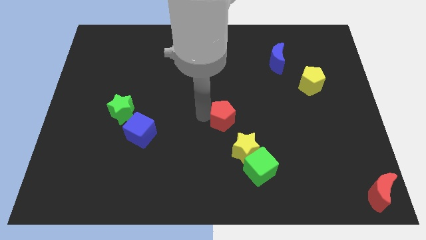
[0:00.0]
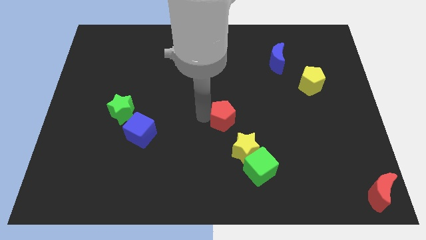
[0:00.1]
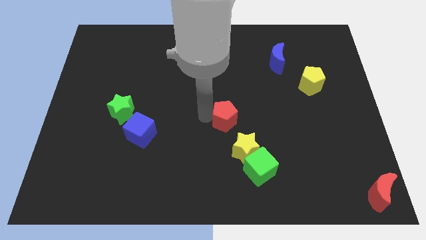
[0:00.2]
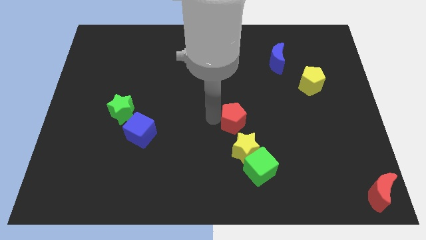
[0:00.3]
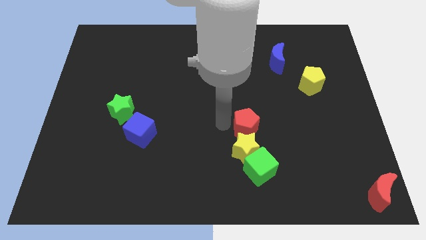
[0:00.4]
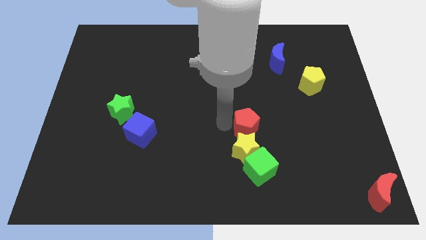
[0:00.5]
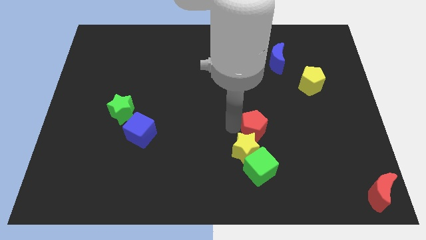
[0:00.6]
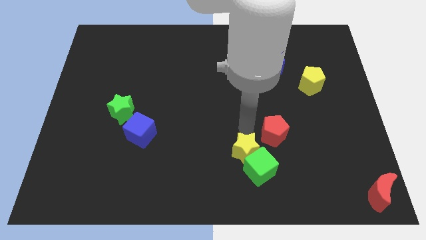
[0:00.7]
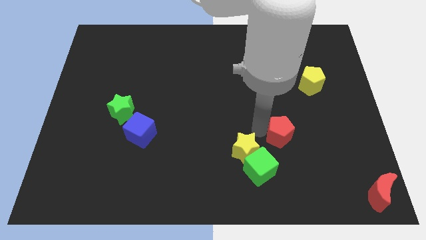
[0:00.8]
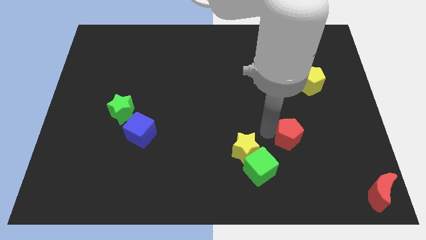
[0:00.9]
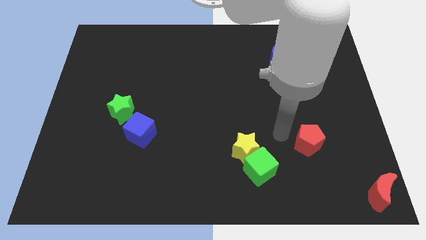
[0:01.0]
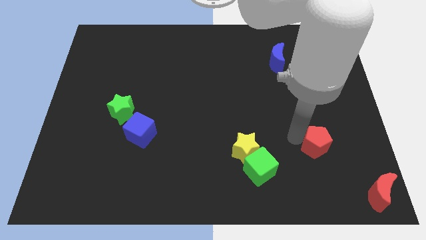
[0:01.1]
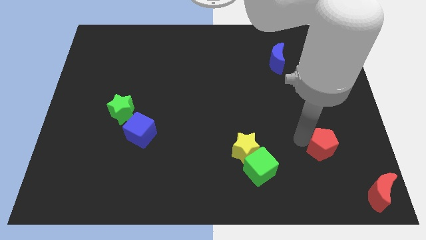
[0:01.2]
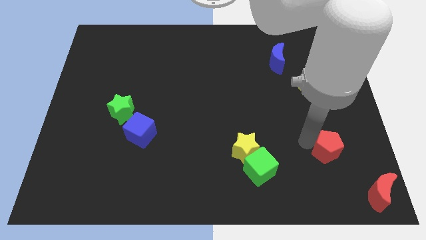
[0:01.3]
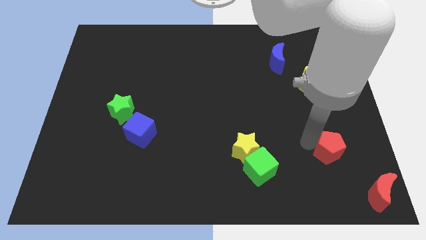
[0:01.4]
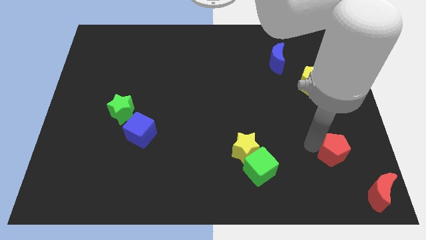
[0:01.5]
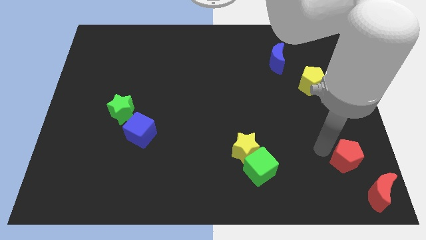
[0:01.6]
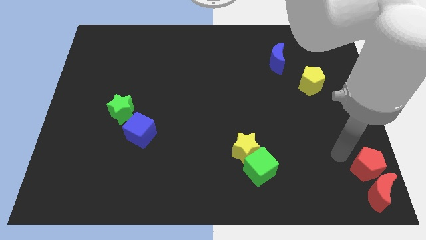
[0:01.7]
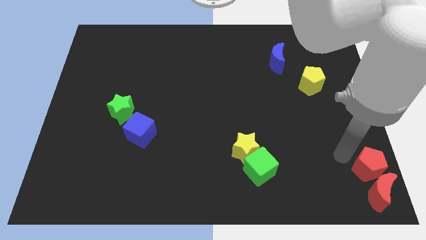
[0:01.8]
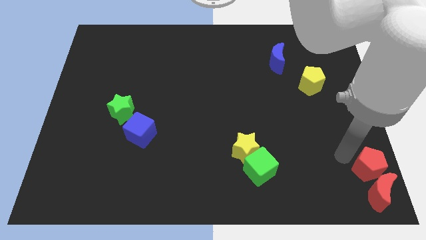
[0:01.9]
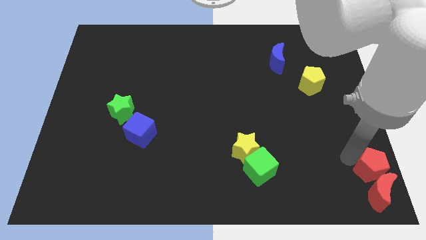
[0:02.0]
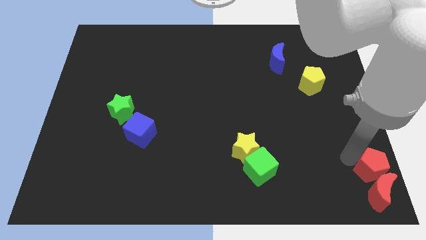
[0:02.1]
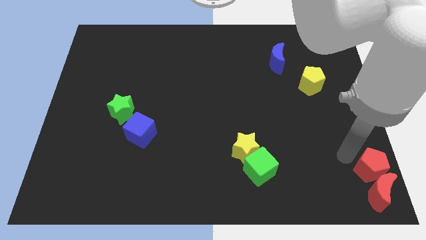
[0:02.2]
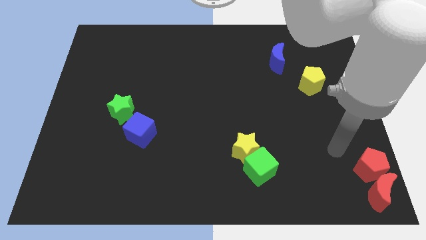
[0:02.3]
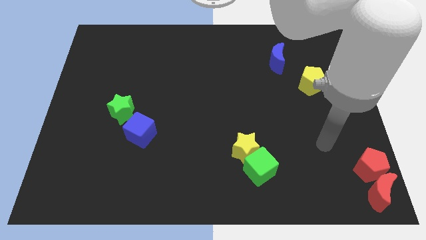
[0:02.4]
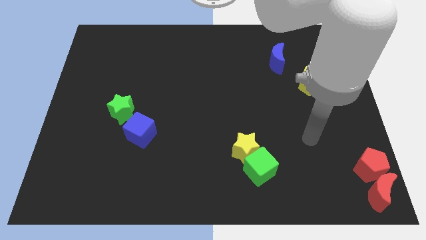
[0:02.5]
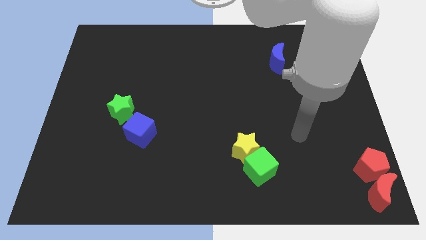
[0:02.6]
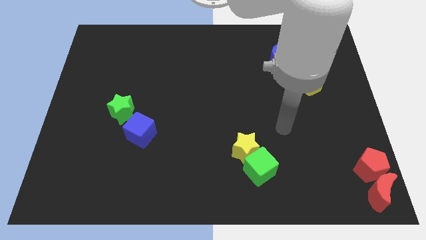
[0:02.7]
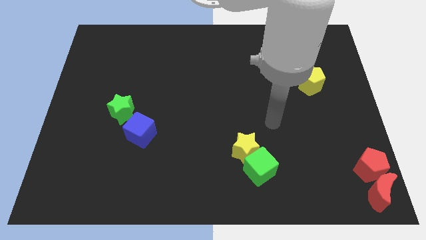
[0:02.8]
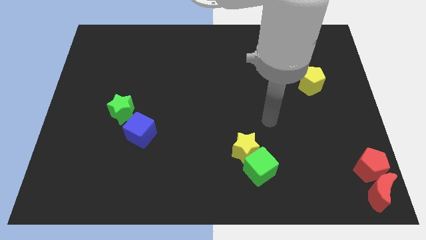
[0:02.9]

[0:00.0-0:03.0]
move red pentagon into the red crescent

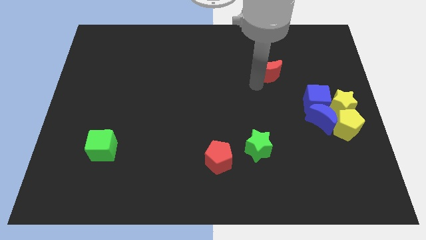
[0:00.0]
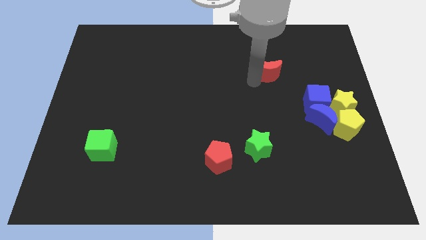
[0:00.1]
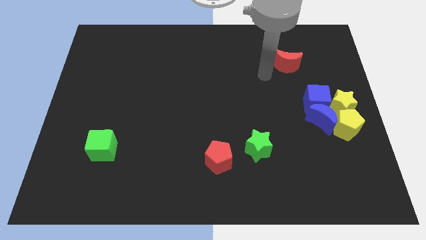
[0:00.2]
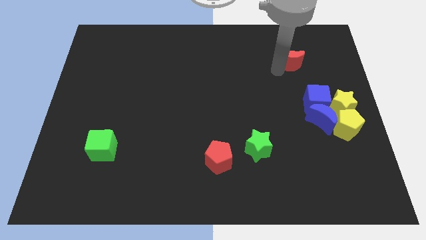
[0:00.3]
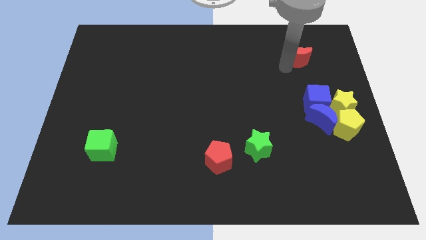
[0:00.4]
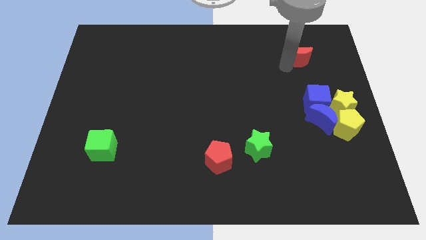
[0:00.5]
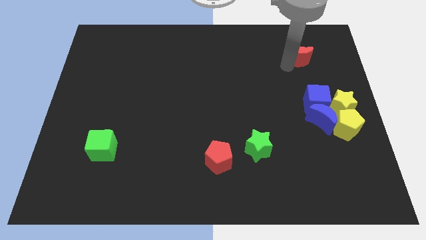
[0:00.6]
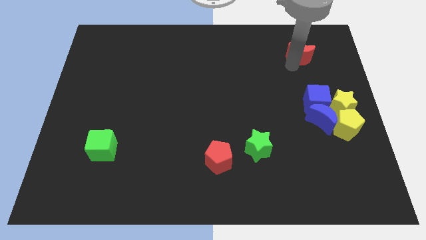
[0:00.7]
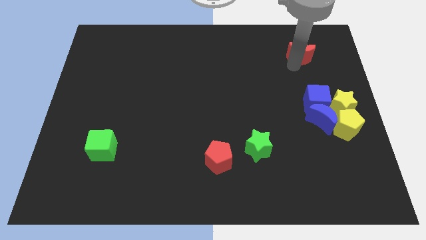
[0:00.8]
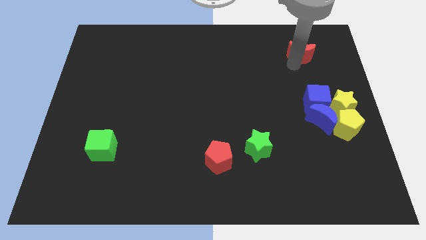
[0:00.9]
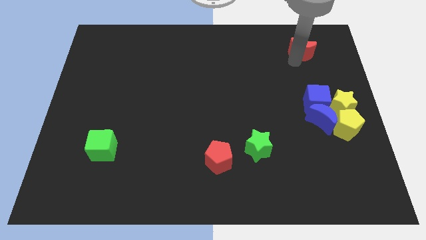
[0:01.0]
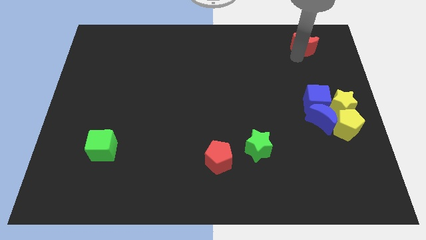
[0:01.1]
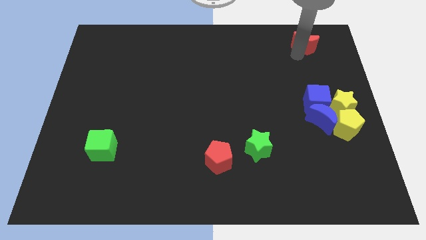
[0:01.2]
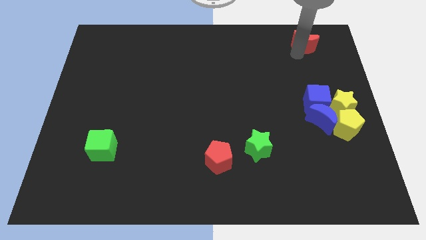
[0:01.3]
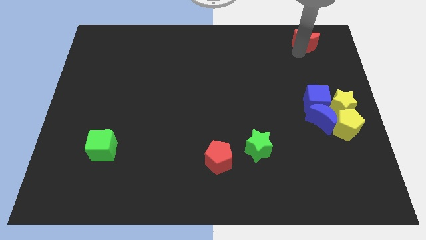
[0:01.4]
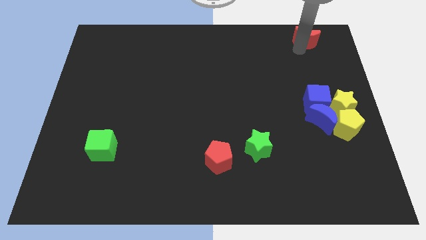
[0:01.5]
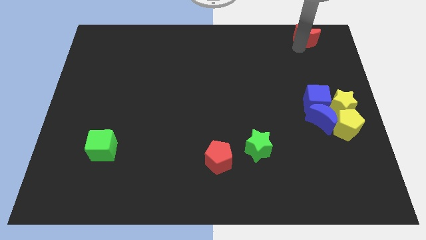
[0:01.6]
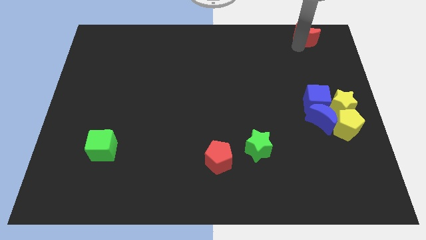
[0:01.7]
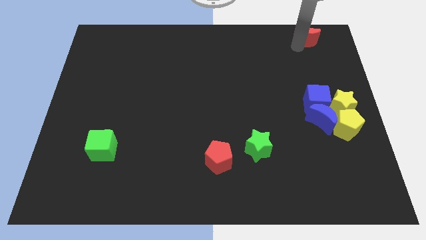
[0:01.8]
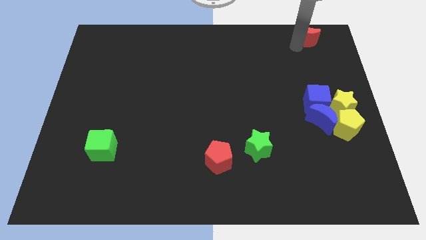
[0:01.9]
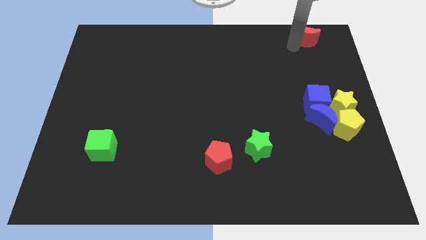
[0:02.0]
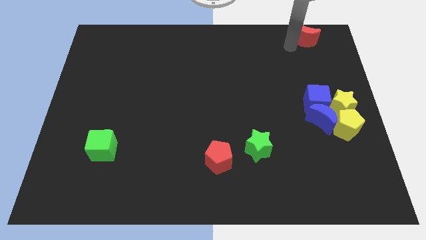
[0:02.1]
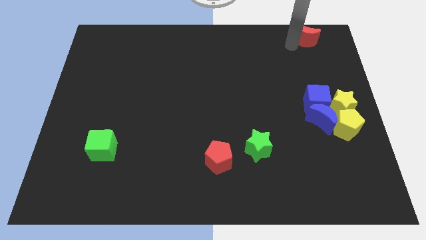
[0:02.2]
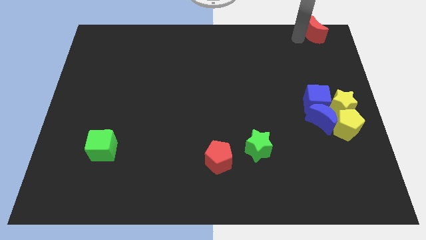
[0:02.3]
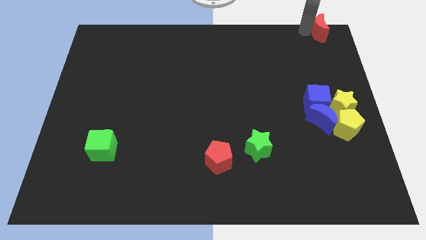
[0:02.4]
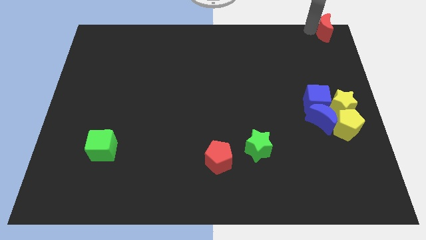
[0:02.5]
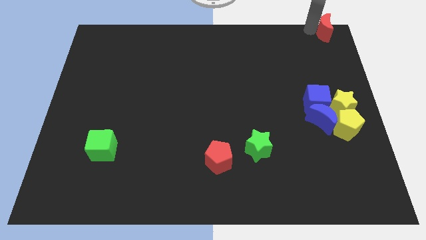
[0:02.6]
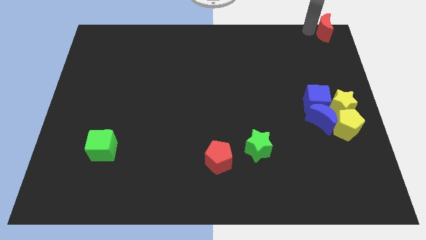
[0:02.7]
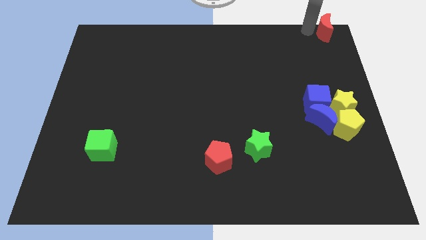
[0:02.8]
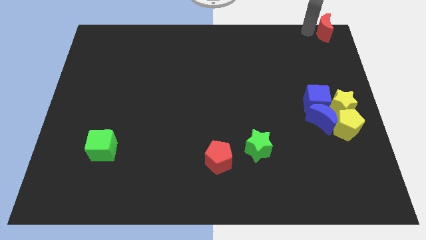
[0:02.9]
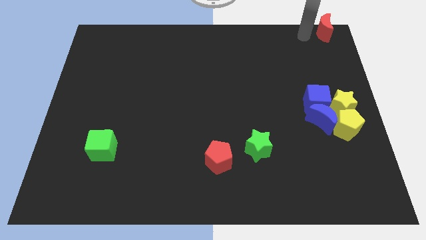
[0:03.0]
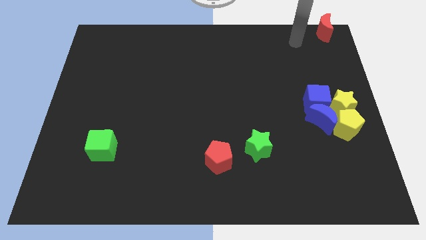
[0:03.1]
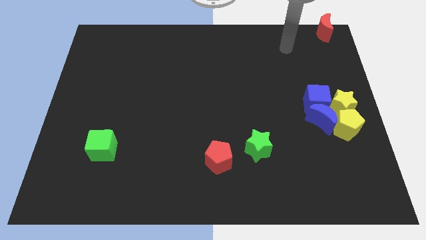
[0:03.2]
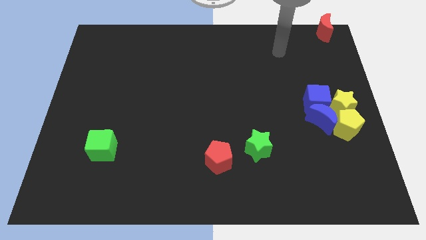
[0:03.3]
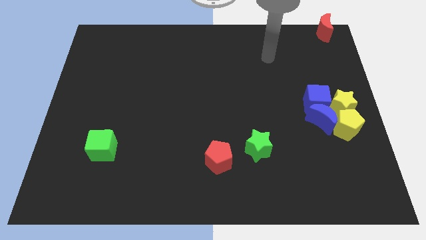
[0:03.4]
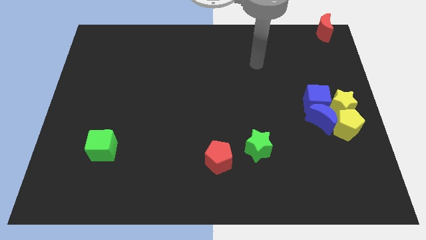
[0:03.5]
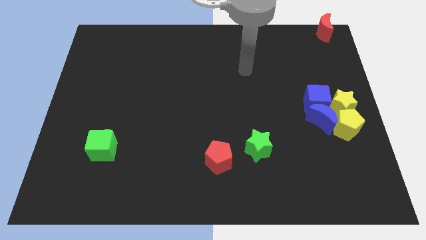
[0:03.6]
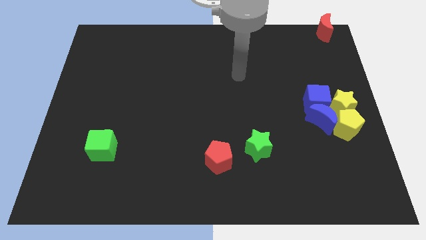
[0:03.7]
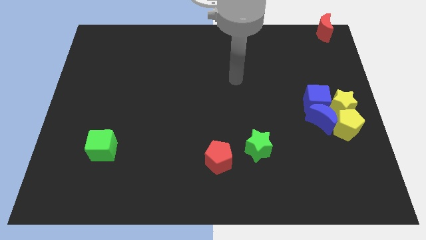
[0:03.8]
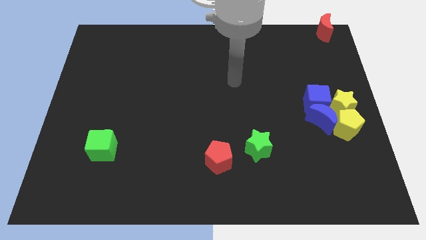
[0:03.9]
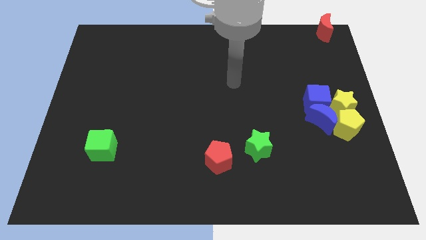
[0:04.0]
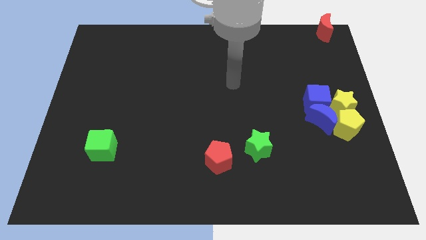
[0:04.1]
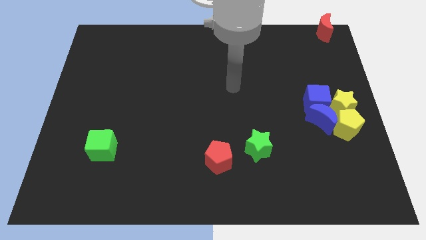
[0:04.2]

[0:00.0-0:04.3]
push the red moon to the top right of the board

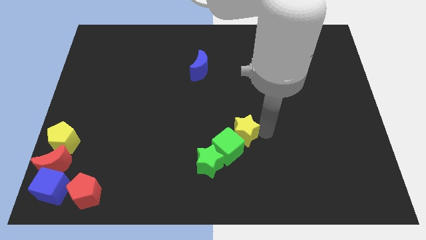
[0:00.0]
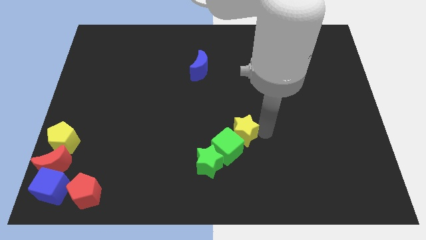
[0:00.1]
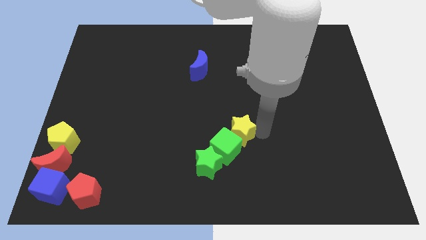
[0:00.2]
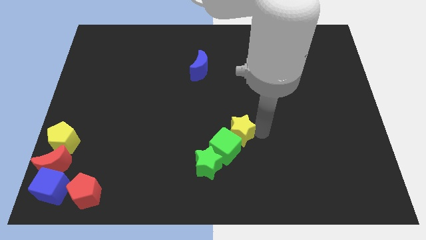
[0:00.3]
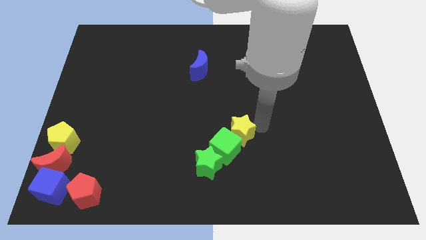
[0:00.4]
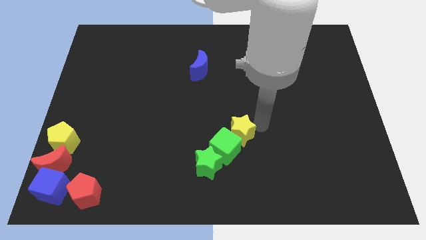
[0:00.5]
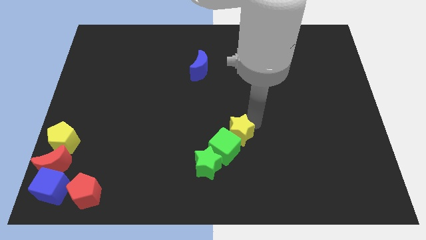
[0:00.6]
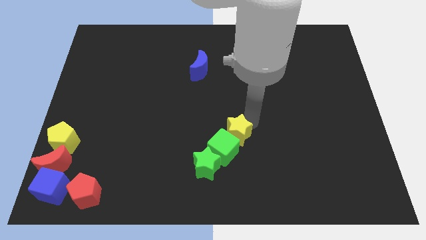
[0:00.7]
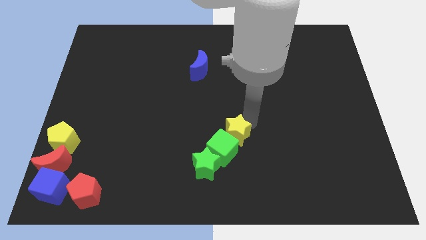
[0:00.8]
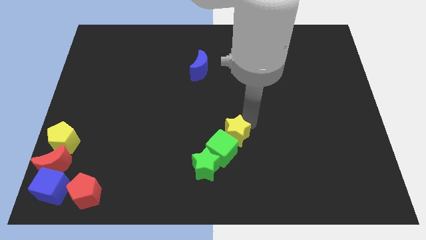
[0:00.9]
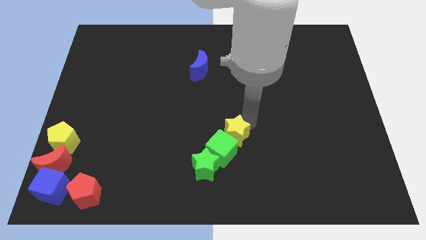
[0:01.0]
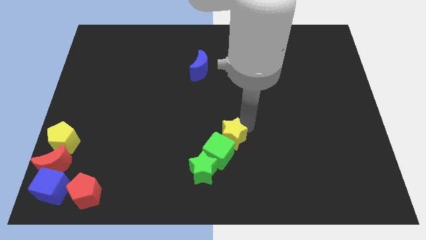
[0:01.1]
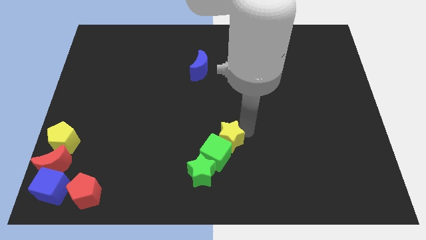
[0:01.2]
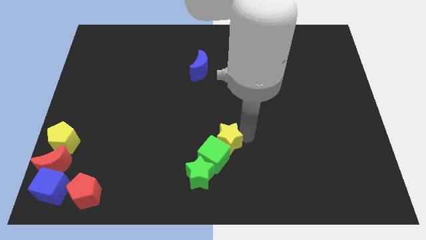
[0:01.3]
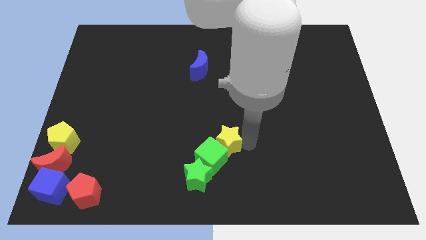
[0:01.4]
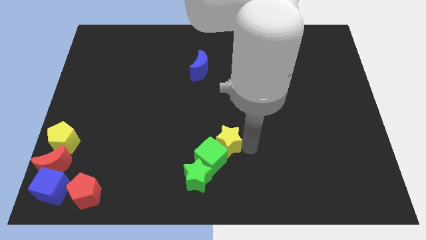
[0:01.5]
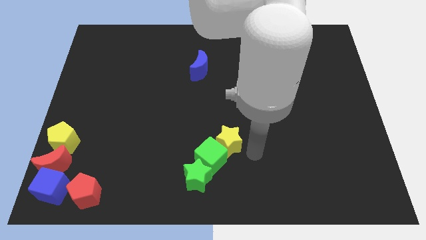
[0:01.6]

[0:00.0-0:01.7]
move green blocks and the yellow star towards the bottom center

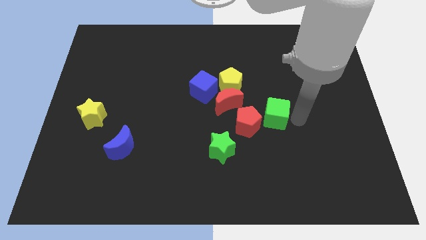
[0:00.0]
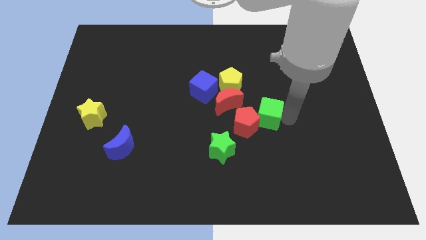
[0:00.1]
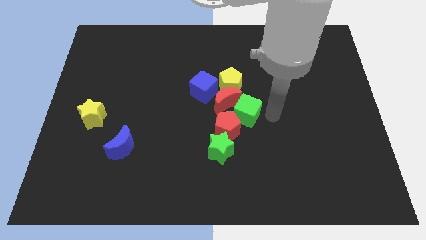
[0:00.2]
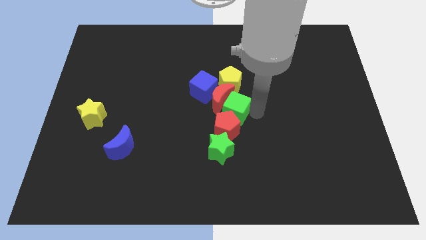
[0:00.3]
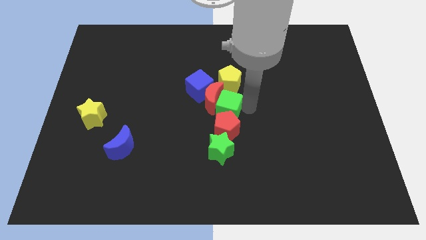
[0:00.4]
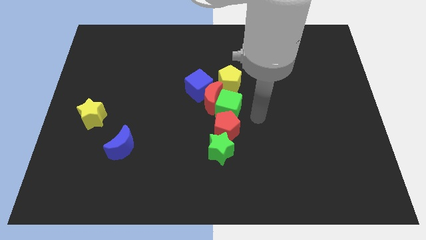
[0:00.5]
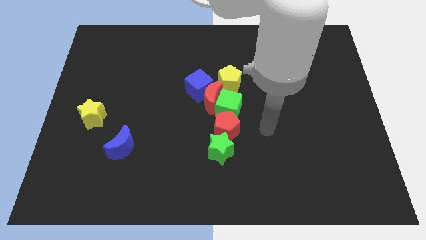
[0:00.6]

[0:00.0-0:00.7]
move green cube into red moon
